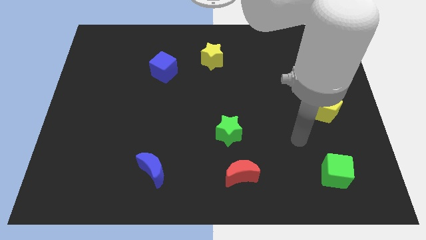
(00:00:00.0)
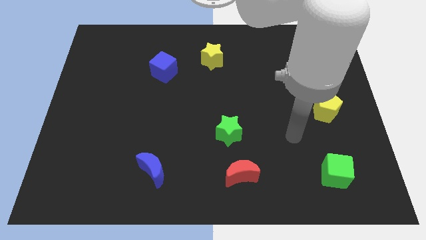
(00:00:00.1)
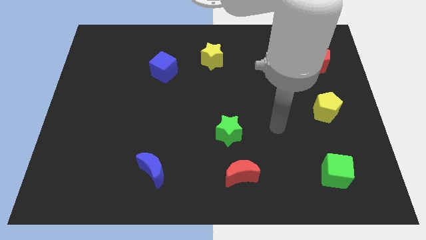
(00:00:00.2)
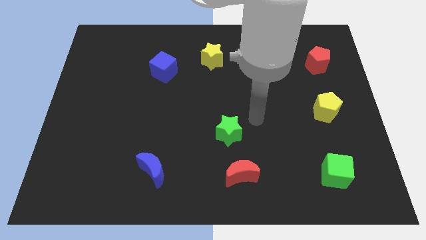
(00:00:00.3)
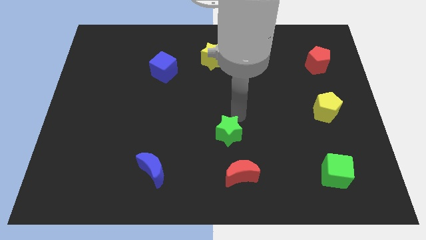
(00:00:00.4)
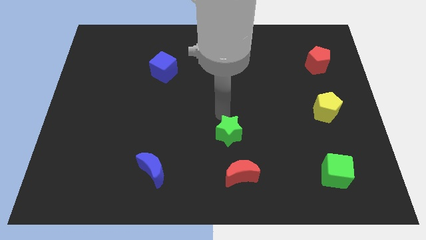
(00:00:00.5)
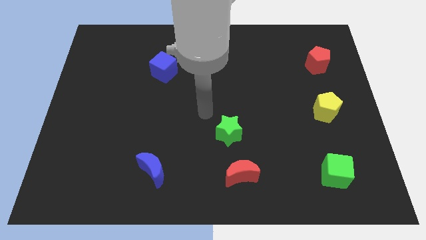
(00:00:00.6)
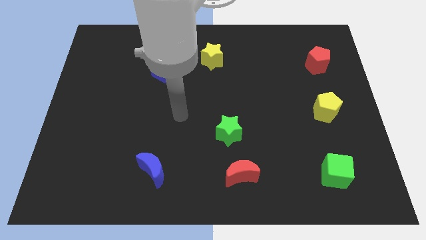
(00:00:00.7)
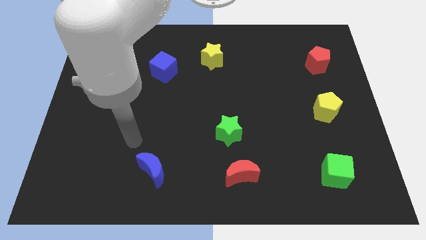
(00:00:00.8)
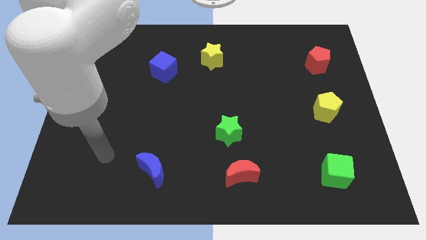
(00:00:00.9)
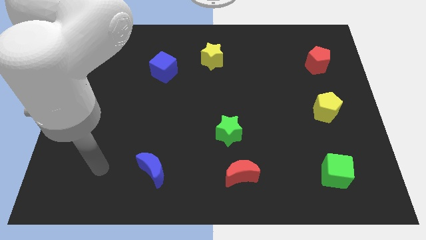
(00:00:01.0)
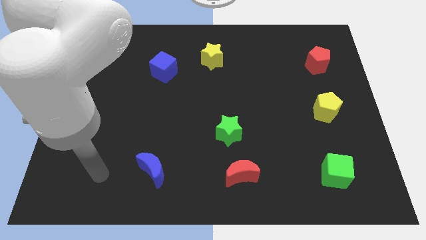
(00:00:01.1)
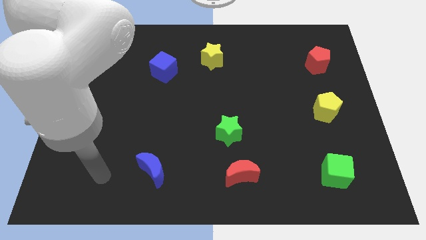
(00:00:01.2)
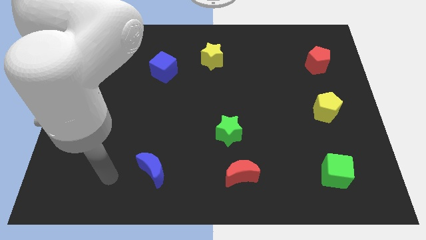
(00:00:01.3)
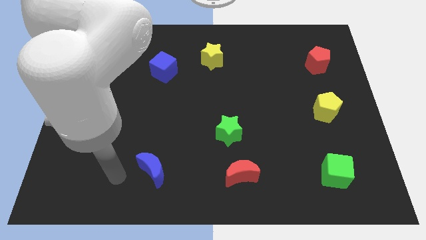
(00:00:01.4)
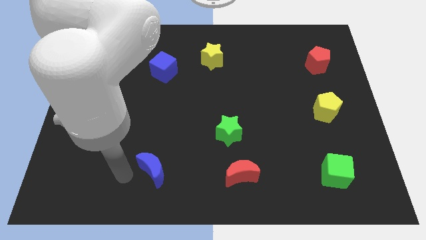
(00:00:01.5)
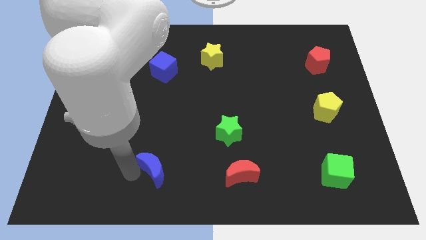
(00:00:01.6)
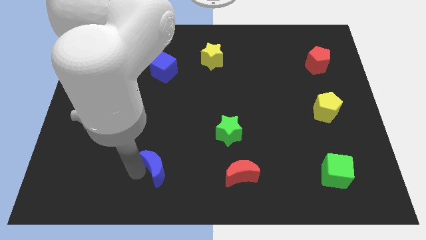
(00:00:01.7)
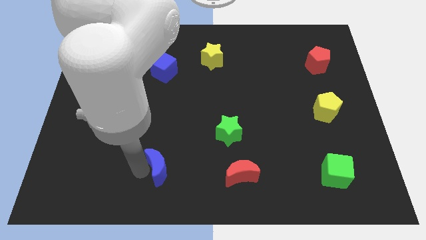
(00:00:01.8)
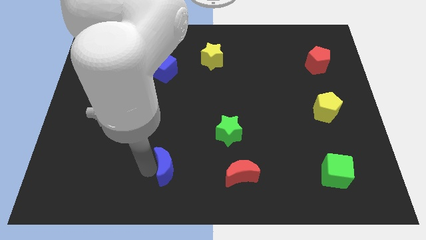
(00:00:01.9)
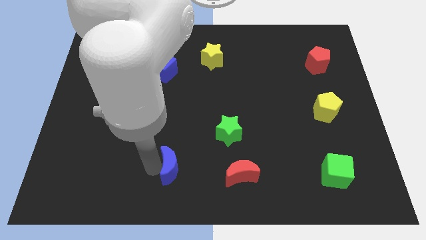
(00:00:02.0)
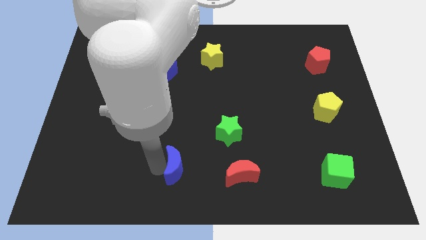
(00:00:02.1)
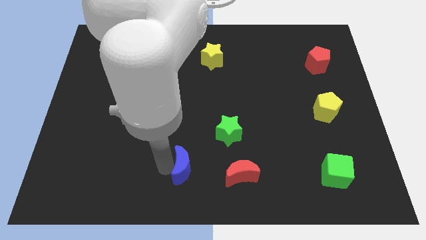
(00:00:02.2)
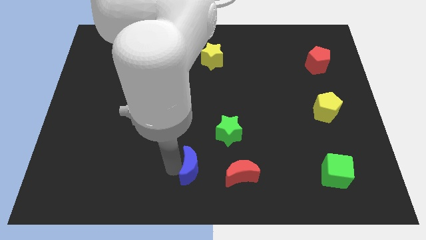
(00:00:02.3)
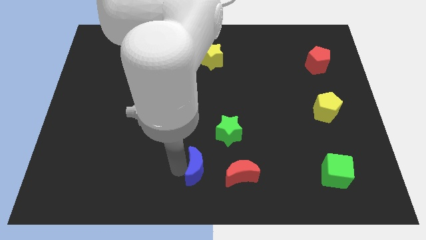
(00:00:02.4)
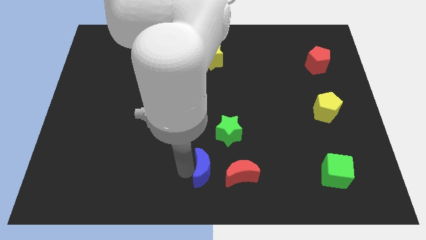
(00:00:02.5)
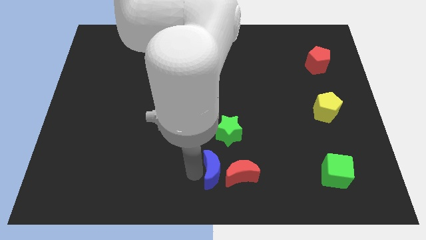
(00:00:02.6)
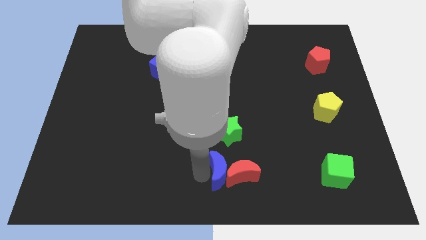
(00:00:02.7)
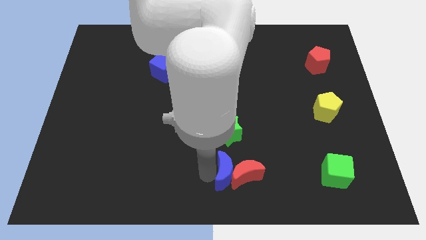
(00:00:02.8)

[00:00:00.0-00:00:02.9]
move the blue moon close to the red moon

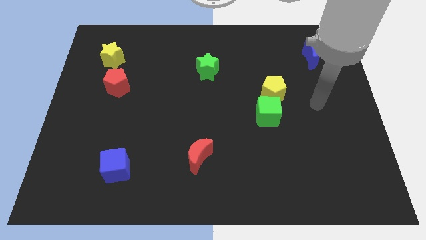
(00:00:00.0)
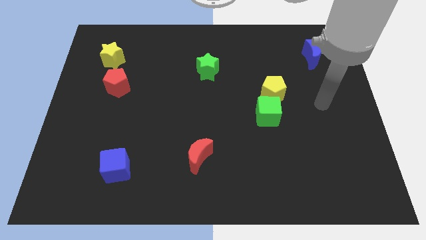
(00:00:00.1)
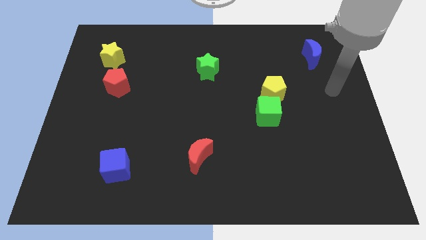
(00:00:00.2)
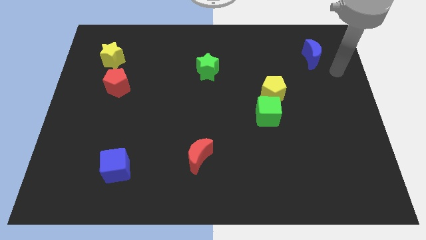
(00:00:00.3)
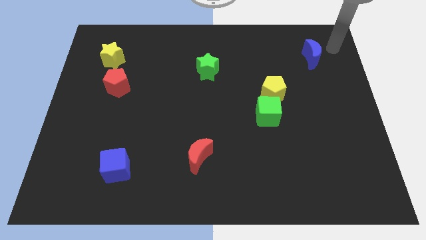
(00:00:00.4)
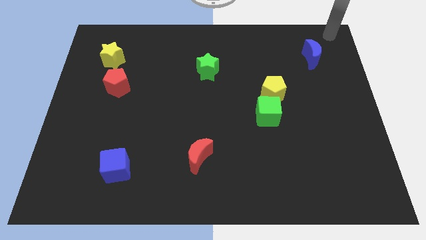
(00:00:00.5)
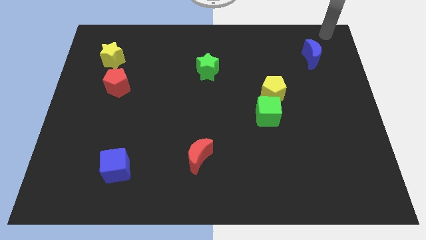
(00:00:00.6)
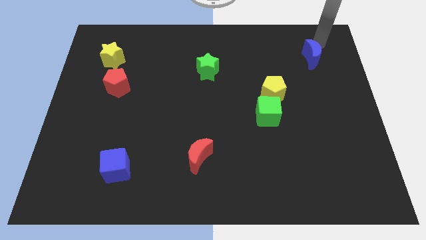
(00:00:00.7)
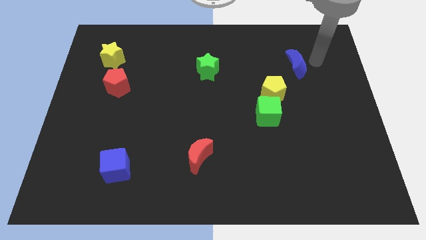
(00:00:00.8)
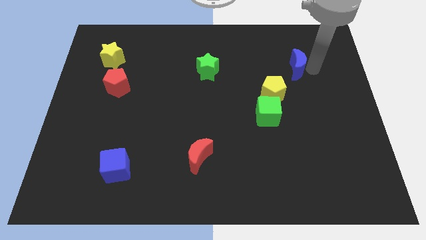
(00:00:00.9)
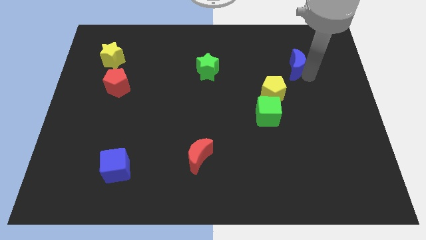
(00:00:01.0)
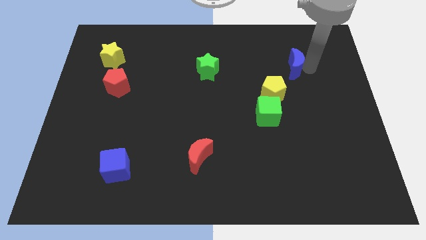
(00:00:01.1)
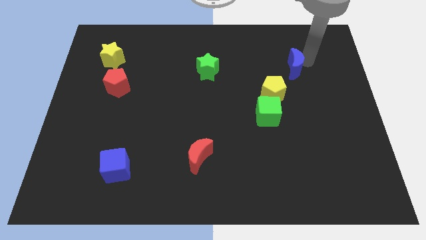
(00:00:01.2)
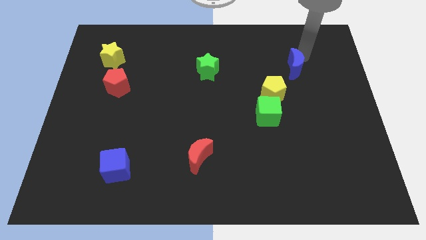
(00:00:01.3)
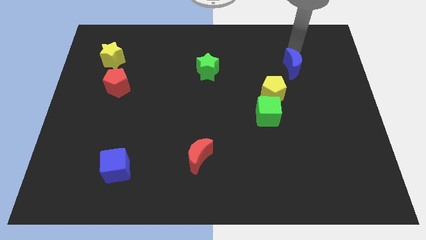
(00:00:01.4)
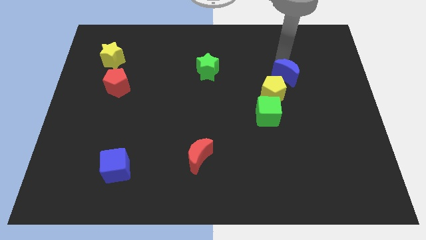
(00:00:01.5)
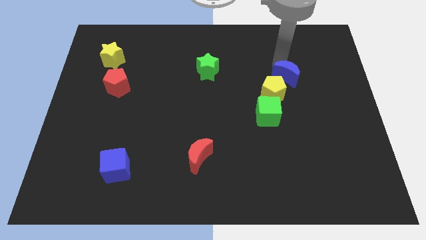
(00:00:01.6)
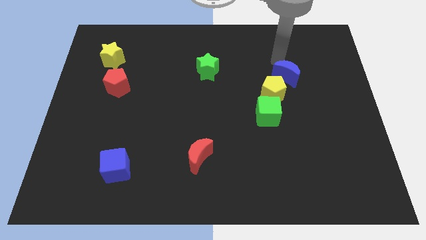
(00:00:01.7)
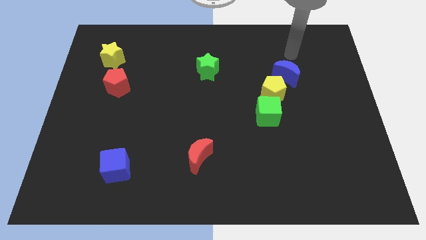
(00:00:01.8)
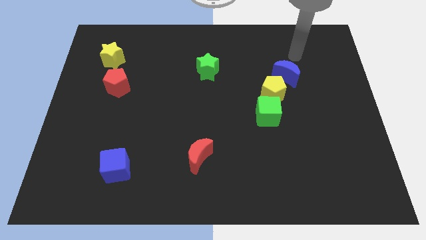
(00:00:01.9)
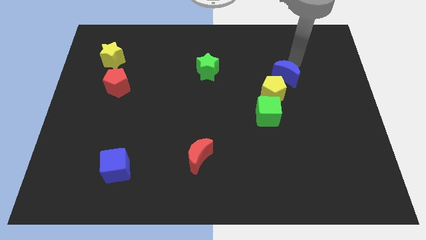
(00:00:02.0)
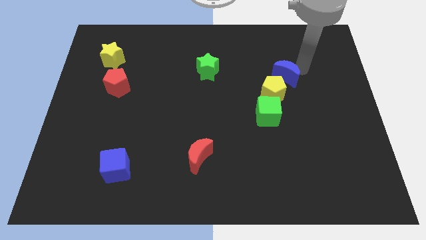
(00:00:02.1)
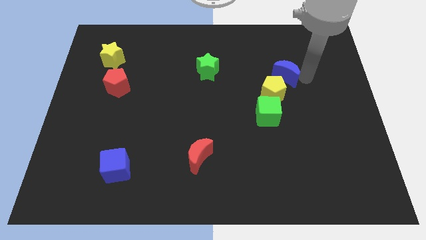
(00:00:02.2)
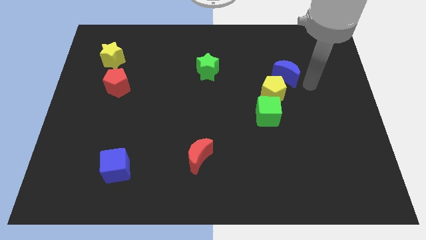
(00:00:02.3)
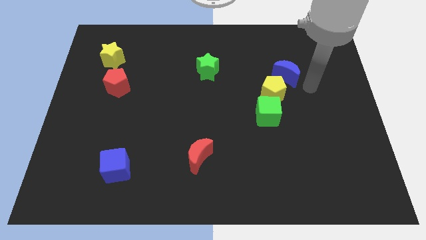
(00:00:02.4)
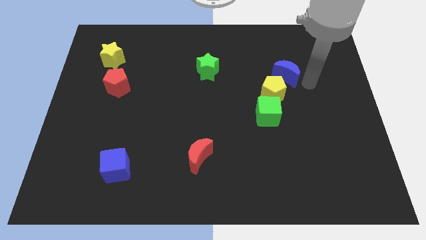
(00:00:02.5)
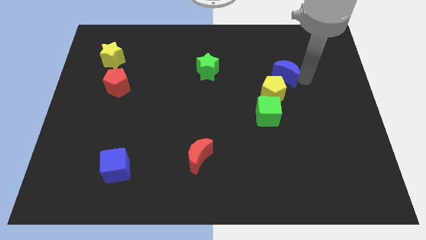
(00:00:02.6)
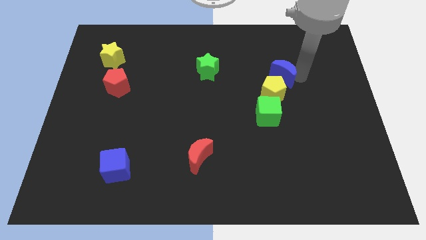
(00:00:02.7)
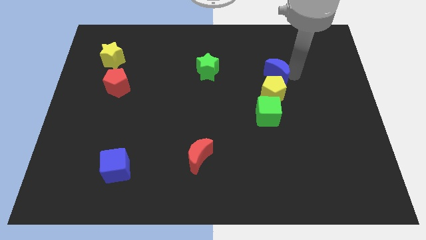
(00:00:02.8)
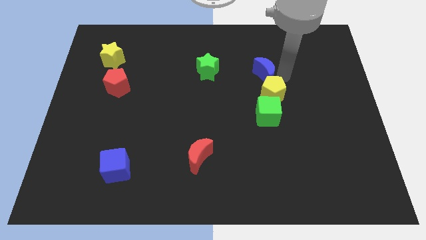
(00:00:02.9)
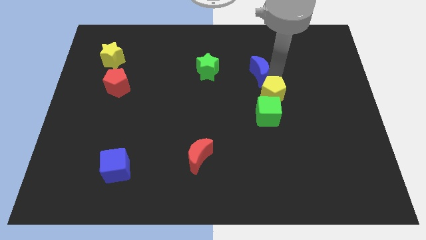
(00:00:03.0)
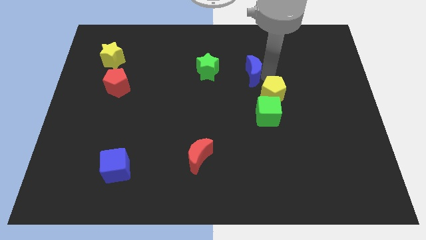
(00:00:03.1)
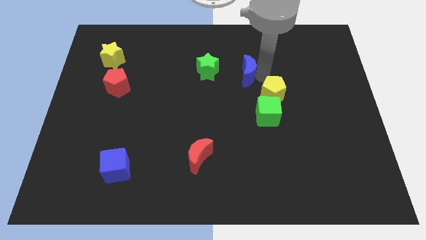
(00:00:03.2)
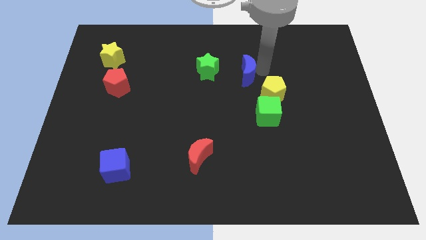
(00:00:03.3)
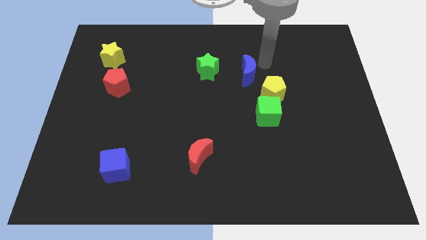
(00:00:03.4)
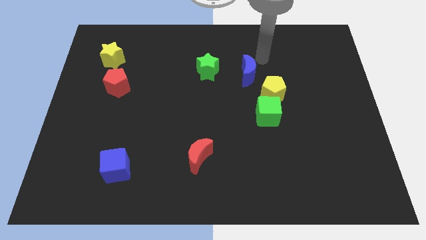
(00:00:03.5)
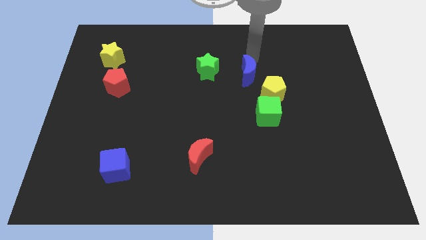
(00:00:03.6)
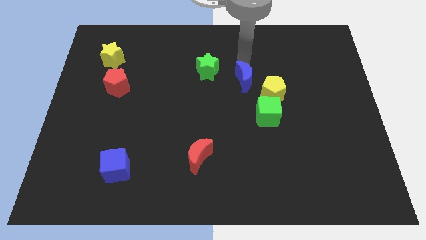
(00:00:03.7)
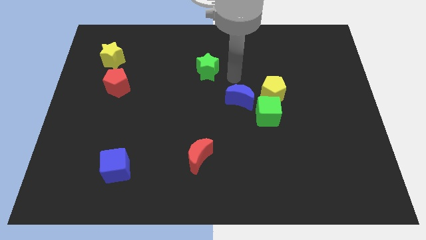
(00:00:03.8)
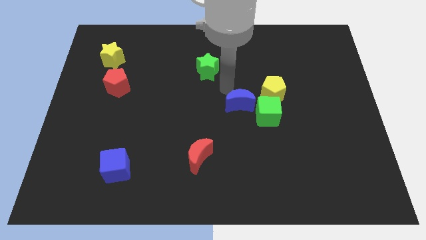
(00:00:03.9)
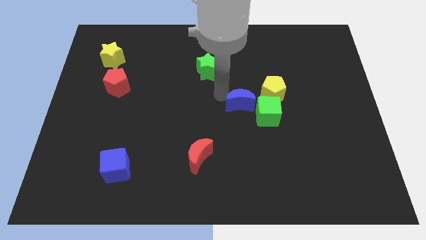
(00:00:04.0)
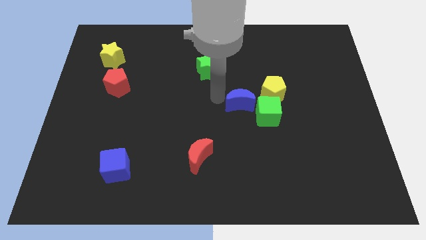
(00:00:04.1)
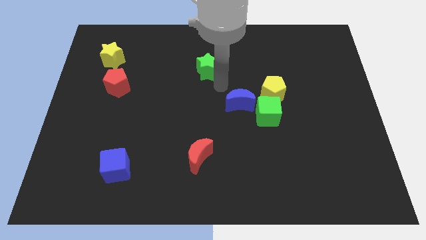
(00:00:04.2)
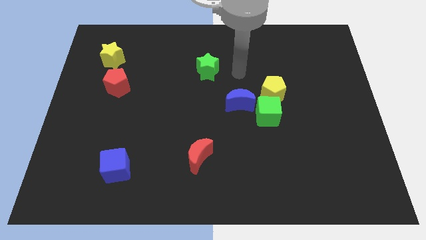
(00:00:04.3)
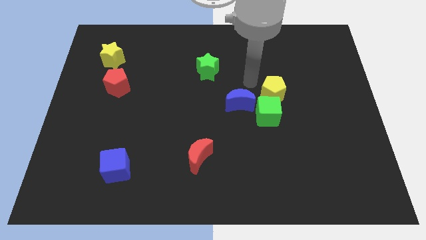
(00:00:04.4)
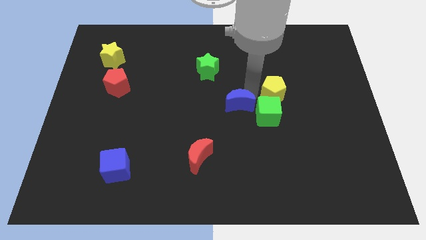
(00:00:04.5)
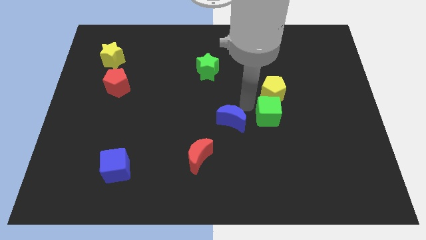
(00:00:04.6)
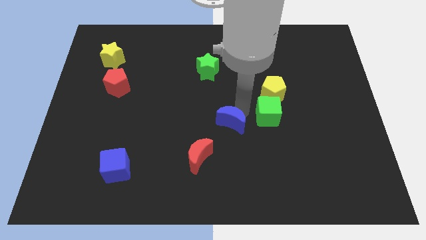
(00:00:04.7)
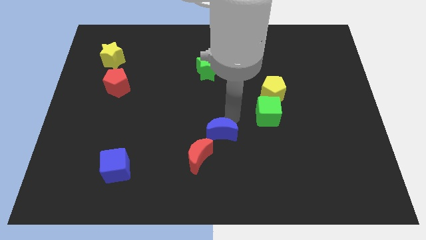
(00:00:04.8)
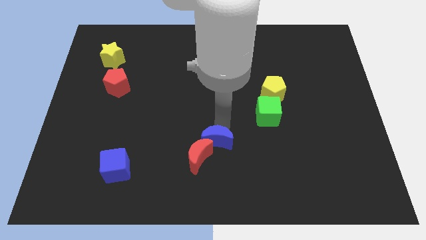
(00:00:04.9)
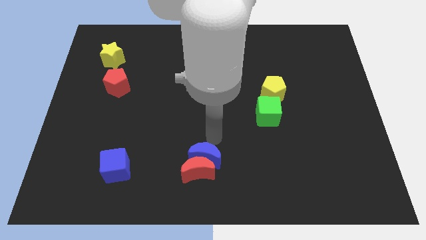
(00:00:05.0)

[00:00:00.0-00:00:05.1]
push the blue moon next to the red moon

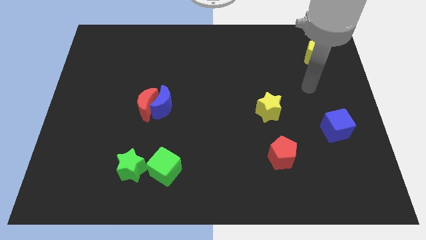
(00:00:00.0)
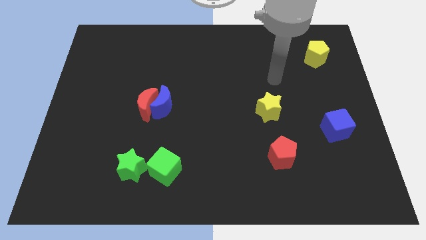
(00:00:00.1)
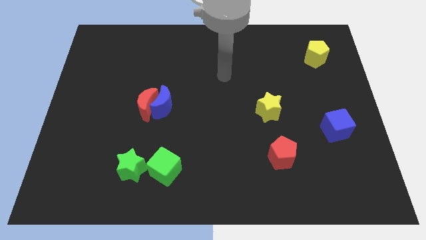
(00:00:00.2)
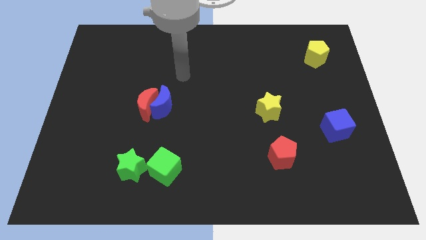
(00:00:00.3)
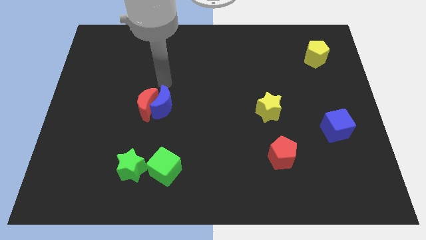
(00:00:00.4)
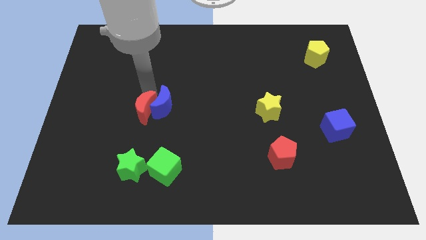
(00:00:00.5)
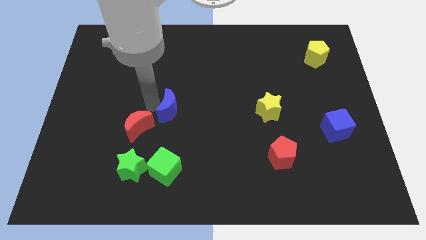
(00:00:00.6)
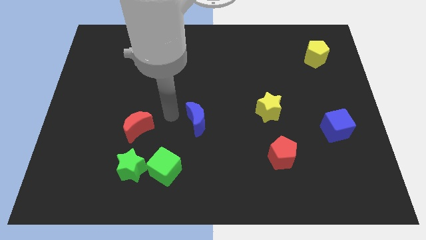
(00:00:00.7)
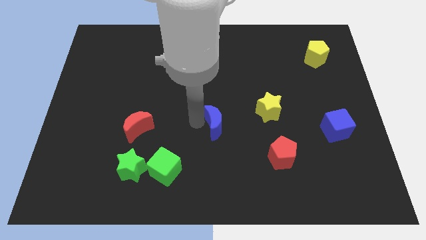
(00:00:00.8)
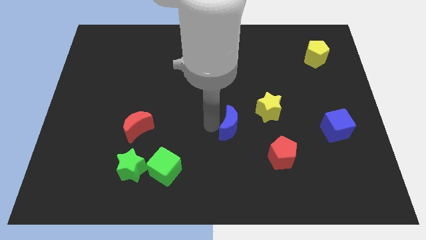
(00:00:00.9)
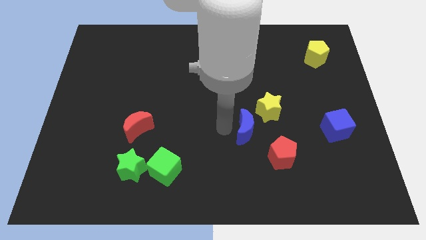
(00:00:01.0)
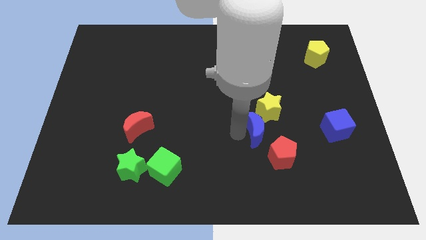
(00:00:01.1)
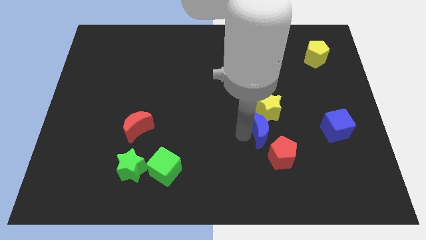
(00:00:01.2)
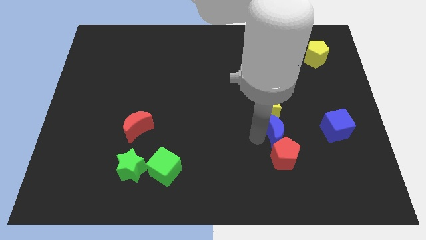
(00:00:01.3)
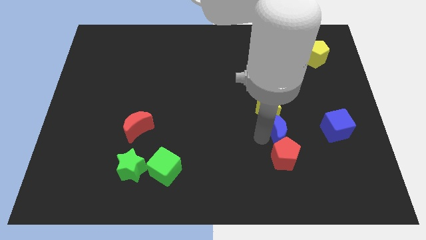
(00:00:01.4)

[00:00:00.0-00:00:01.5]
put the blue moon to the red pentagon
